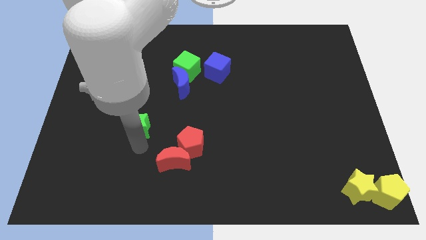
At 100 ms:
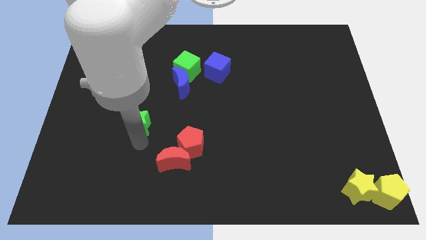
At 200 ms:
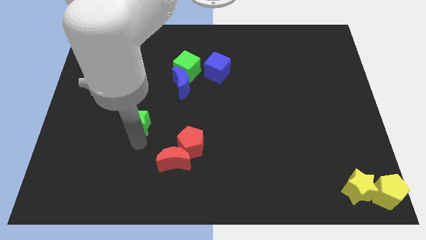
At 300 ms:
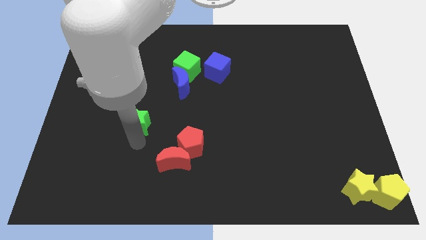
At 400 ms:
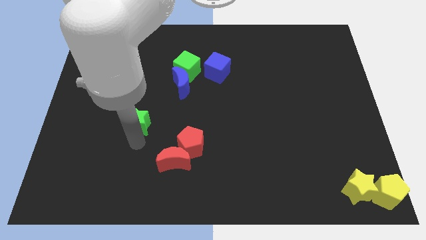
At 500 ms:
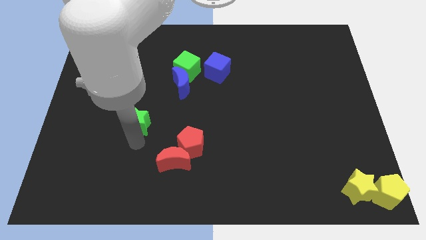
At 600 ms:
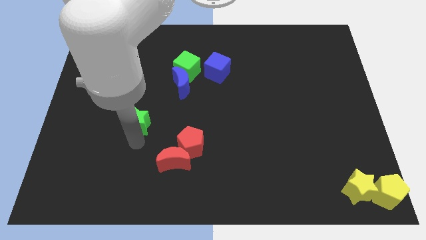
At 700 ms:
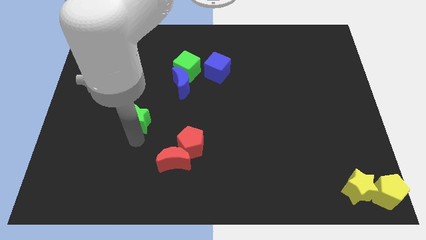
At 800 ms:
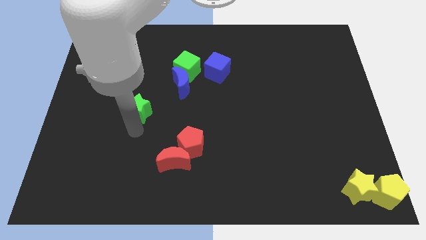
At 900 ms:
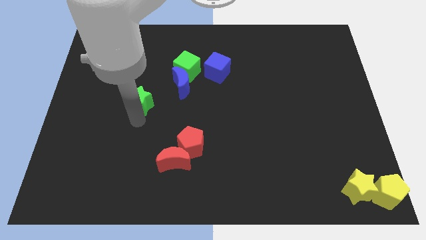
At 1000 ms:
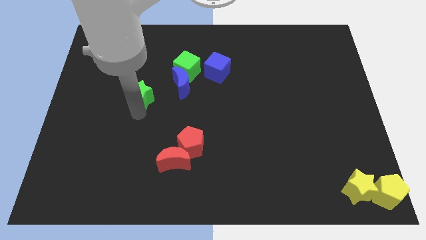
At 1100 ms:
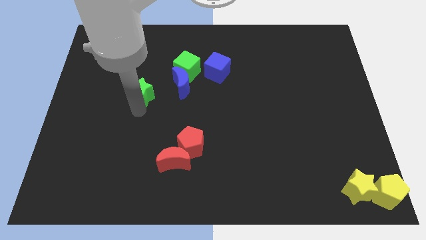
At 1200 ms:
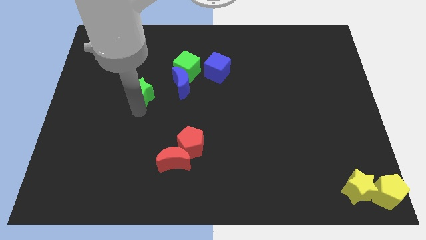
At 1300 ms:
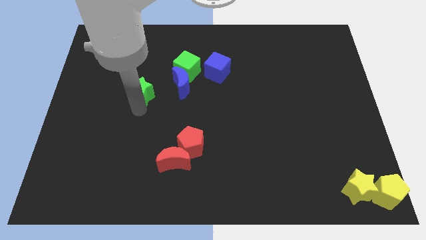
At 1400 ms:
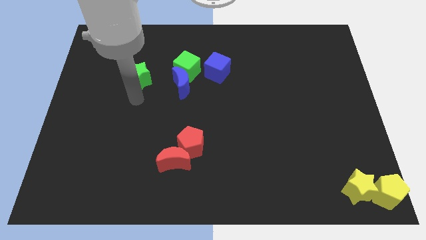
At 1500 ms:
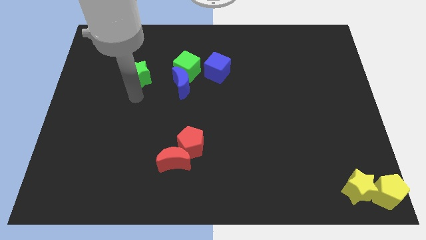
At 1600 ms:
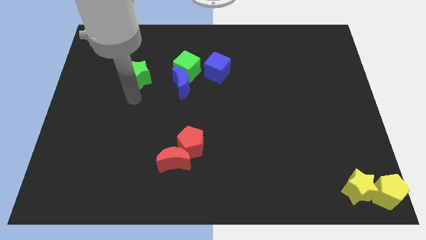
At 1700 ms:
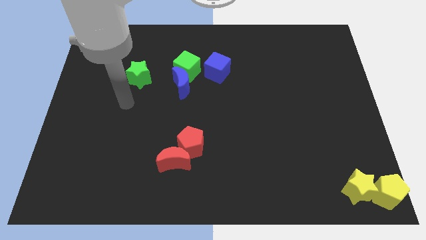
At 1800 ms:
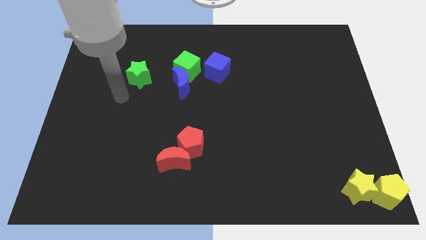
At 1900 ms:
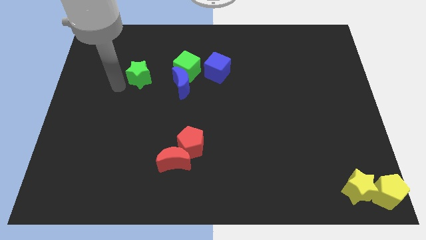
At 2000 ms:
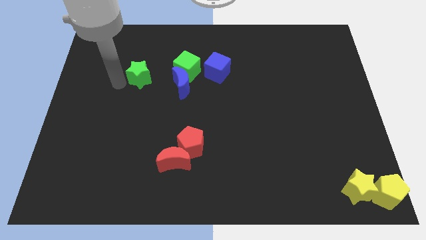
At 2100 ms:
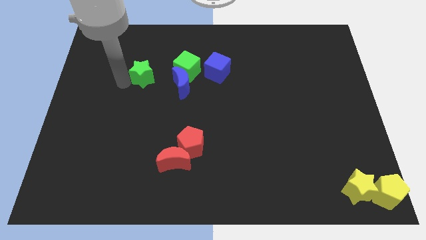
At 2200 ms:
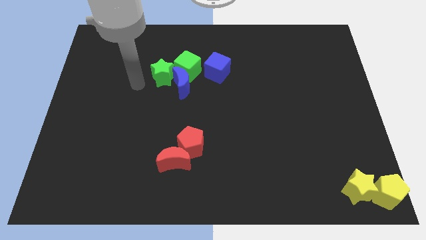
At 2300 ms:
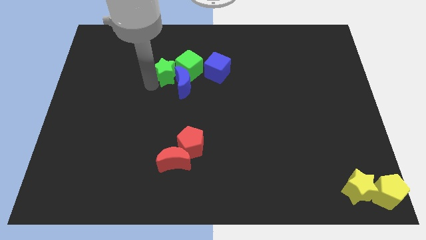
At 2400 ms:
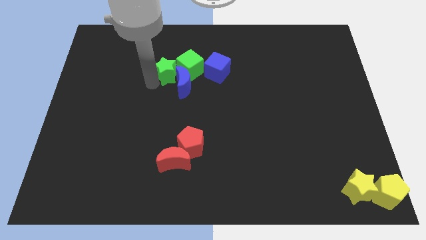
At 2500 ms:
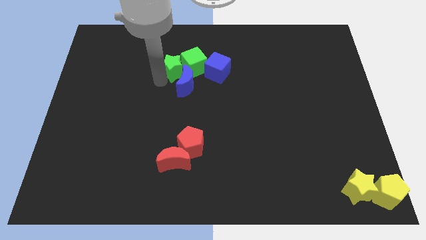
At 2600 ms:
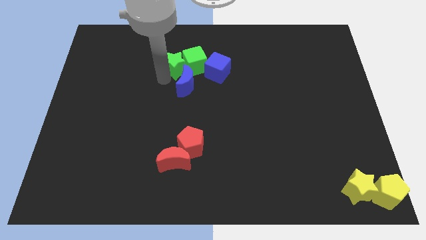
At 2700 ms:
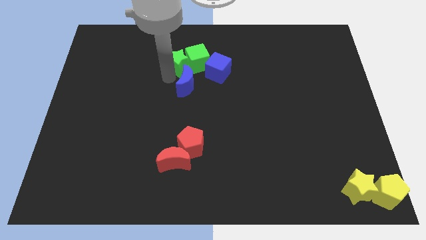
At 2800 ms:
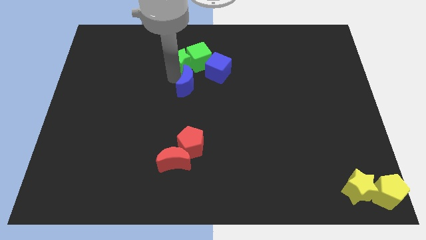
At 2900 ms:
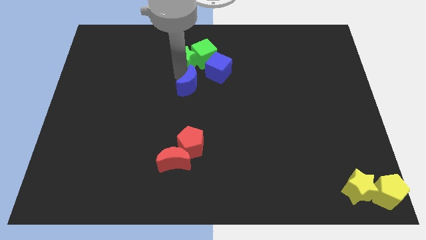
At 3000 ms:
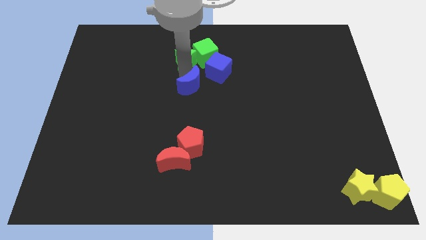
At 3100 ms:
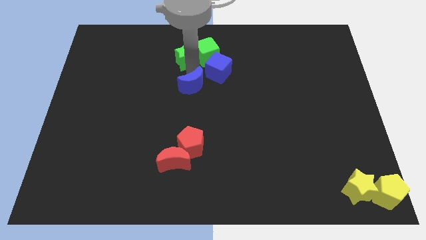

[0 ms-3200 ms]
put the green star vertically above the blue moon

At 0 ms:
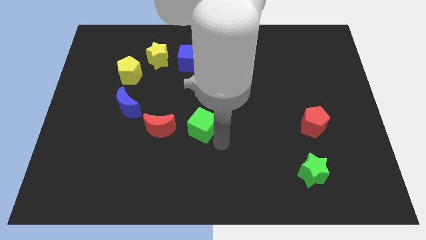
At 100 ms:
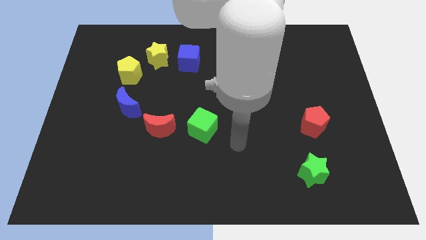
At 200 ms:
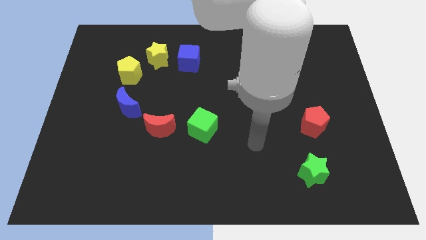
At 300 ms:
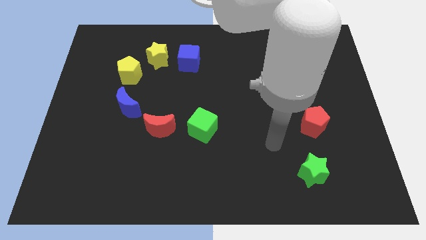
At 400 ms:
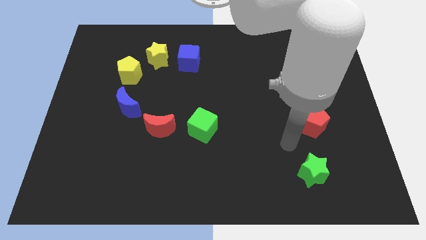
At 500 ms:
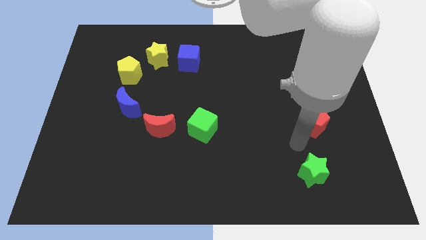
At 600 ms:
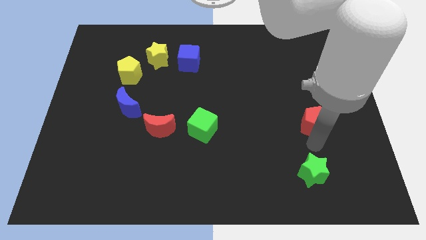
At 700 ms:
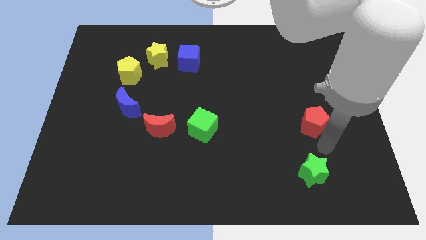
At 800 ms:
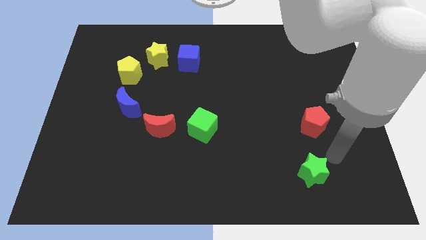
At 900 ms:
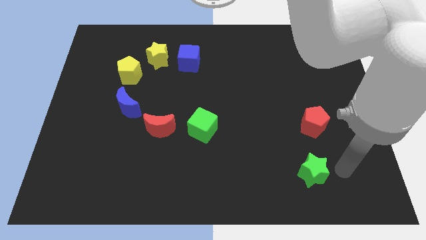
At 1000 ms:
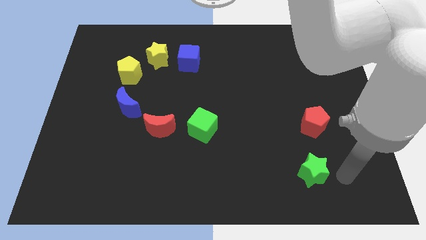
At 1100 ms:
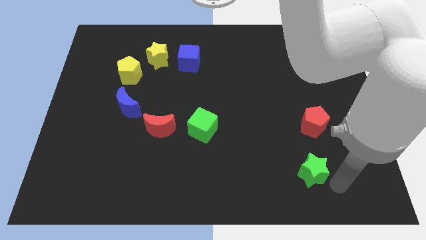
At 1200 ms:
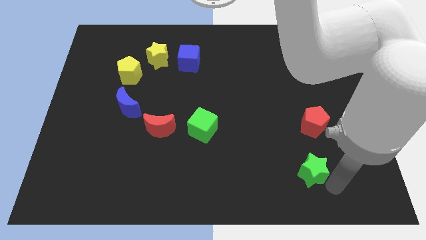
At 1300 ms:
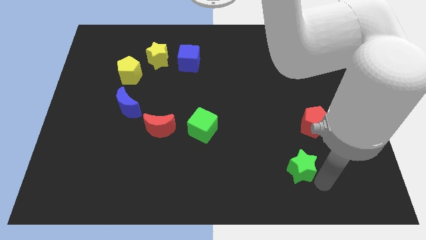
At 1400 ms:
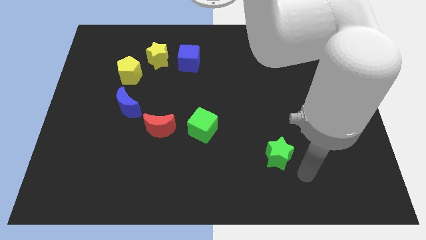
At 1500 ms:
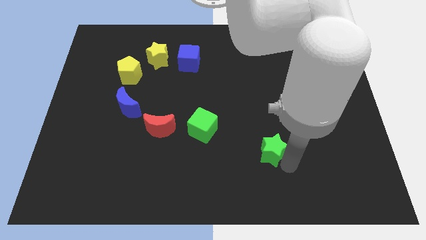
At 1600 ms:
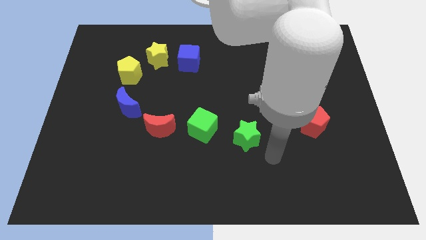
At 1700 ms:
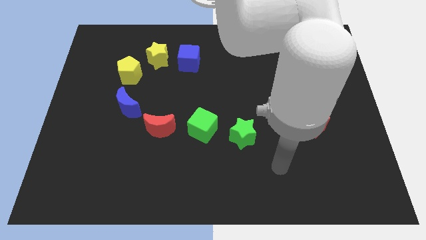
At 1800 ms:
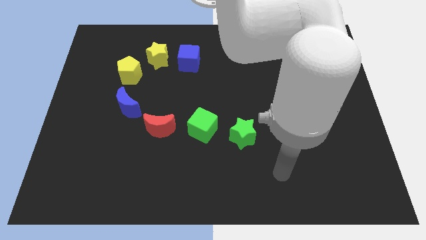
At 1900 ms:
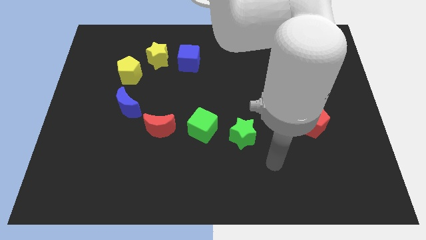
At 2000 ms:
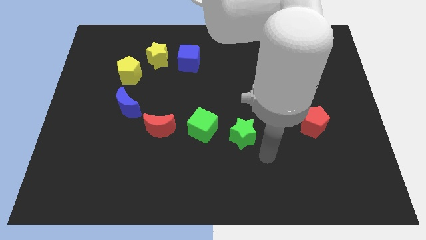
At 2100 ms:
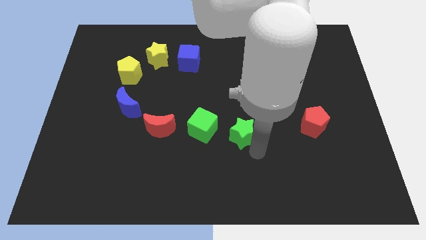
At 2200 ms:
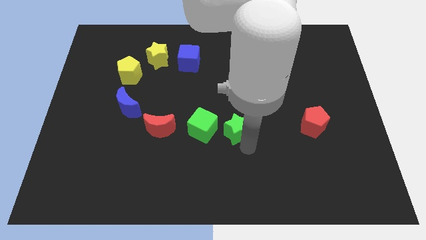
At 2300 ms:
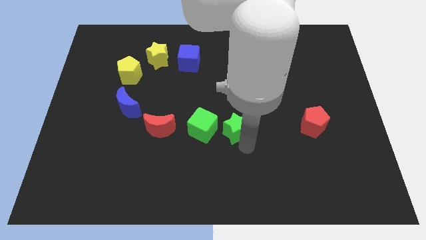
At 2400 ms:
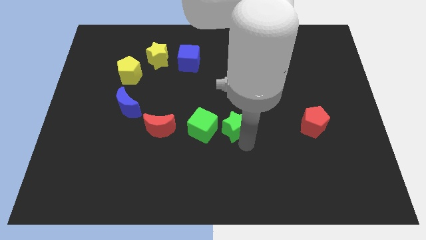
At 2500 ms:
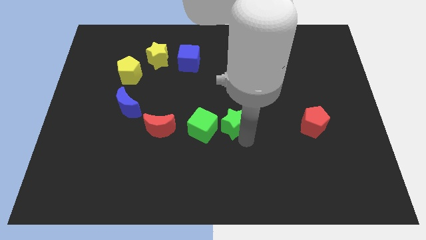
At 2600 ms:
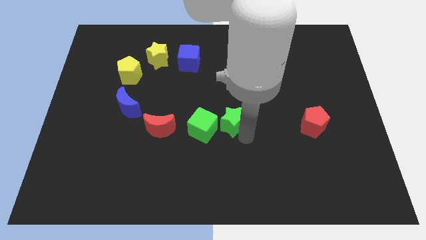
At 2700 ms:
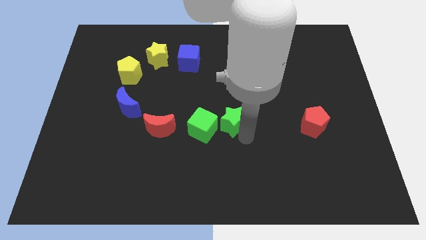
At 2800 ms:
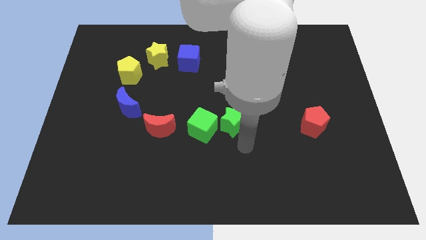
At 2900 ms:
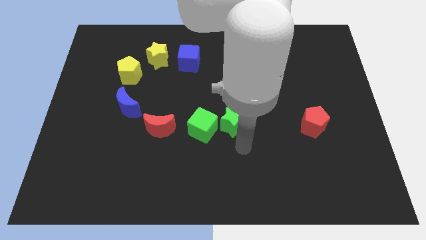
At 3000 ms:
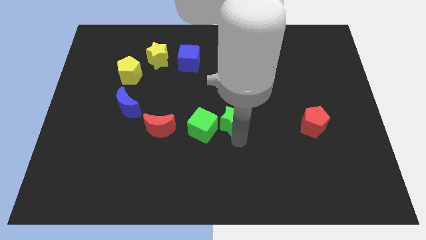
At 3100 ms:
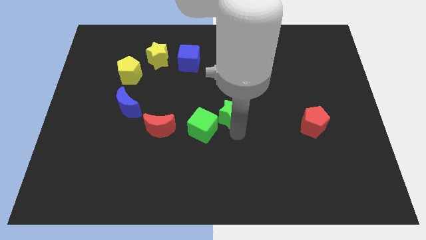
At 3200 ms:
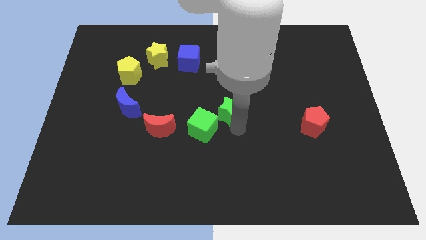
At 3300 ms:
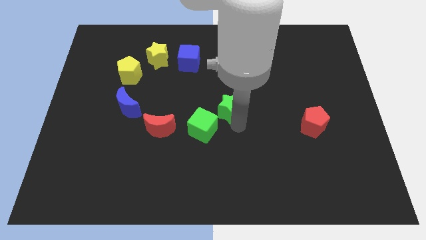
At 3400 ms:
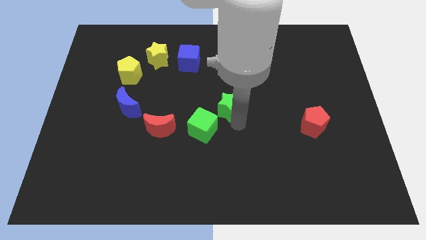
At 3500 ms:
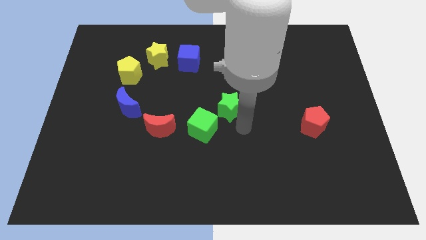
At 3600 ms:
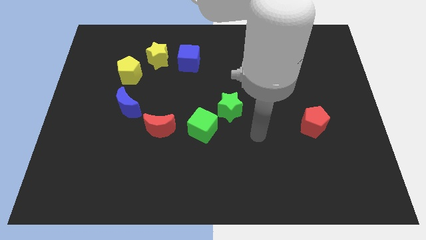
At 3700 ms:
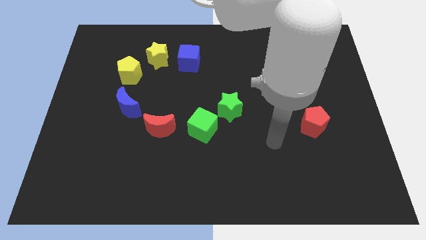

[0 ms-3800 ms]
place the green star near green cube

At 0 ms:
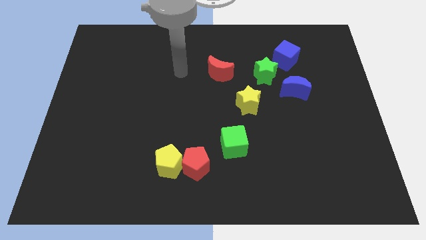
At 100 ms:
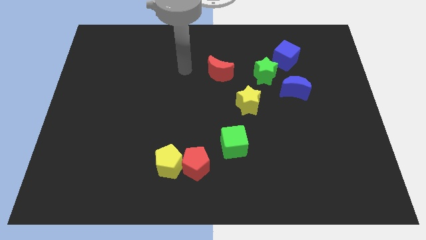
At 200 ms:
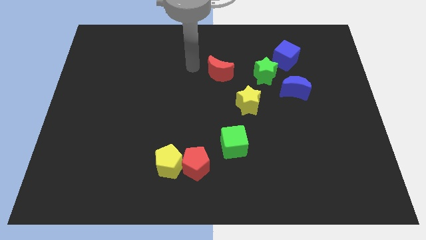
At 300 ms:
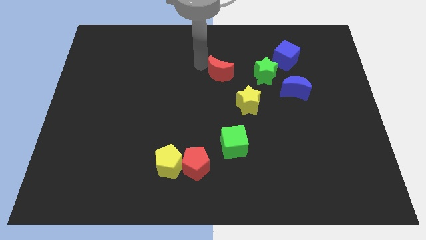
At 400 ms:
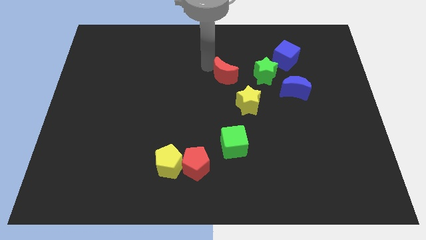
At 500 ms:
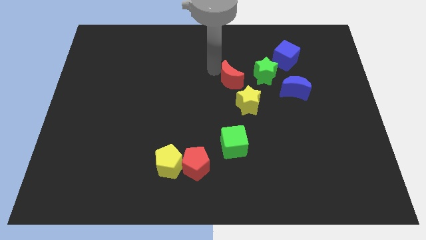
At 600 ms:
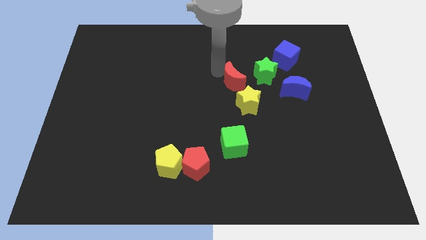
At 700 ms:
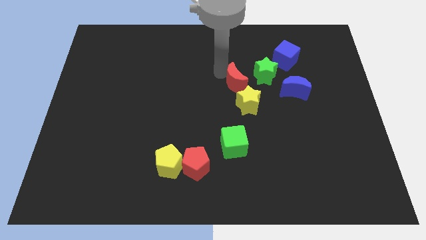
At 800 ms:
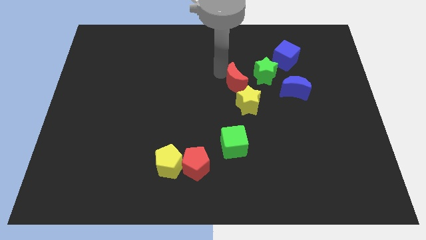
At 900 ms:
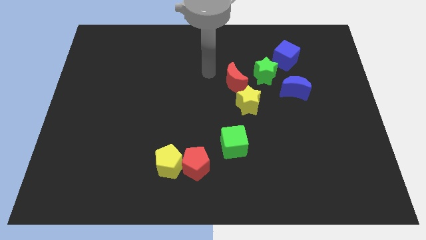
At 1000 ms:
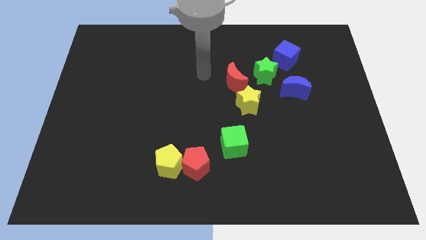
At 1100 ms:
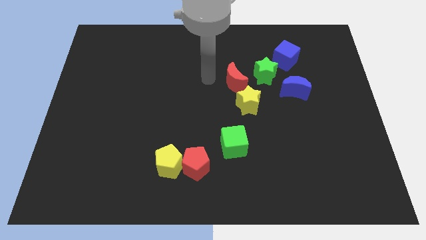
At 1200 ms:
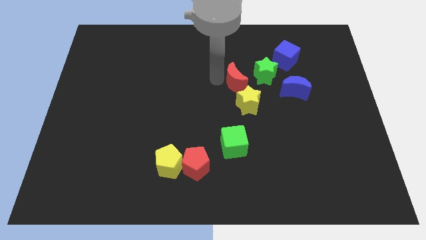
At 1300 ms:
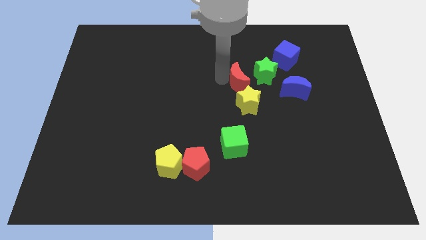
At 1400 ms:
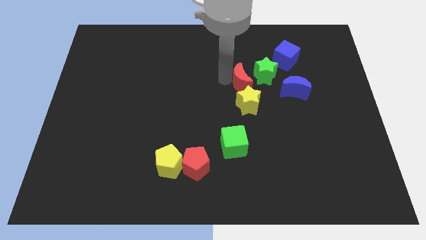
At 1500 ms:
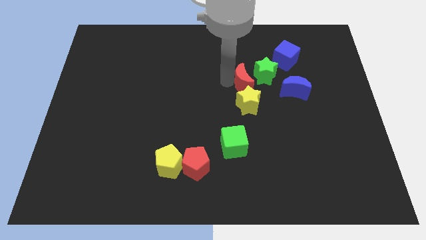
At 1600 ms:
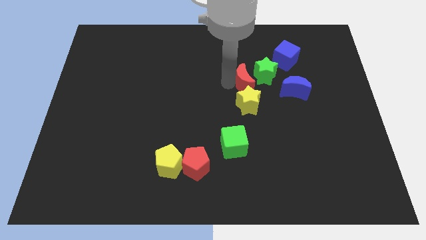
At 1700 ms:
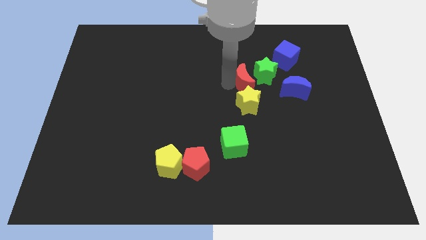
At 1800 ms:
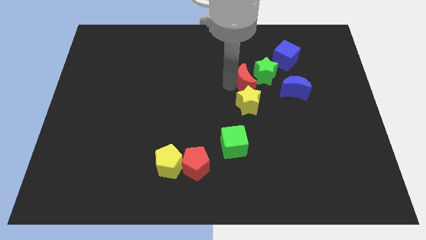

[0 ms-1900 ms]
move the red moon to the top side of the yellow star

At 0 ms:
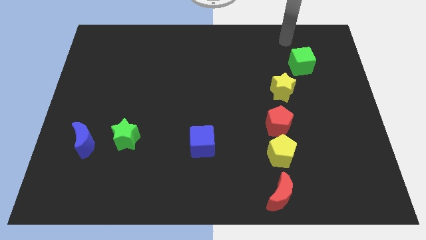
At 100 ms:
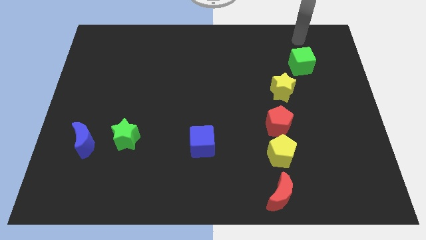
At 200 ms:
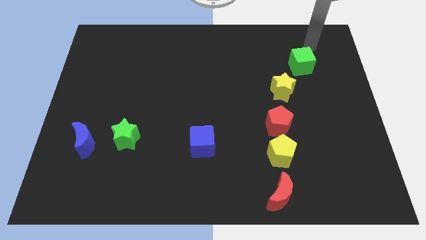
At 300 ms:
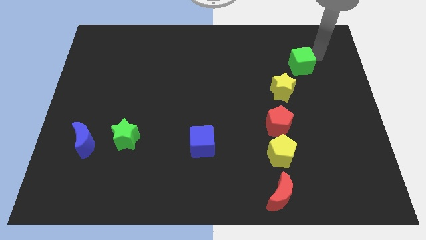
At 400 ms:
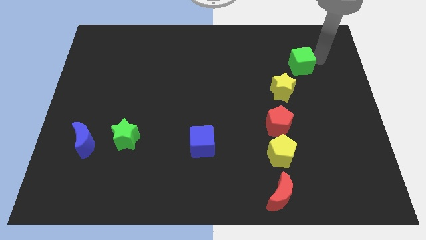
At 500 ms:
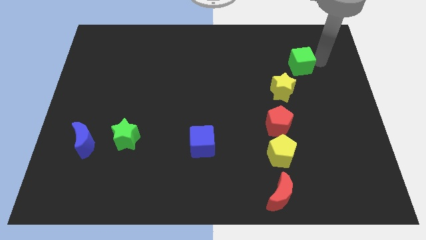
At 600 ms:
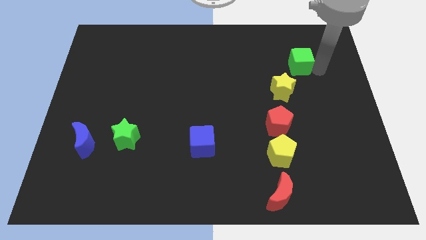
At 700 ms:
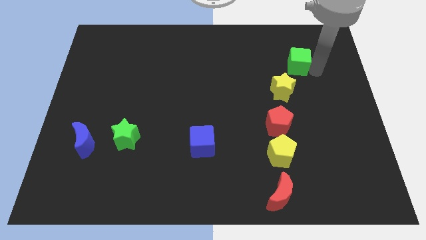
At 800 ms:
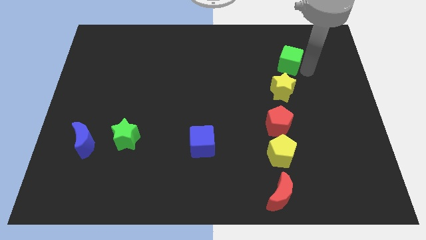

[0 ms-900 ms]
place green cube above yellow star
